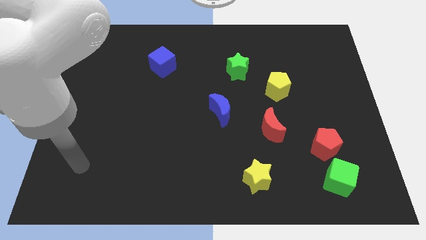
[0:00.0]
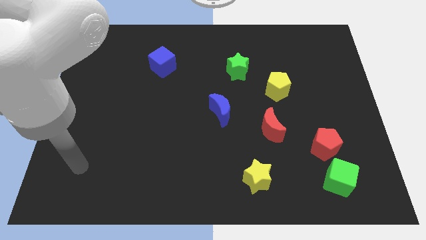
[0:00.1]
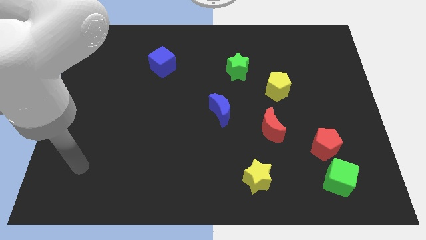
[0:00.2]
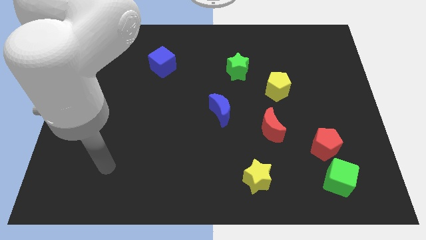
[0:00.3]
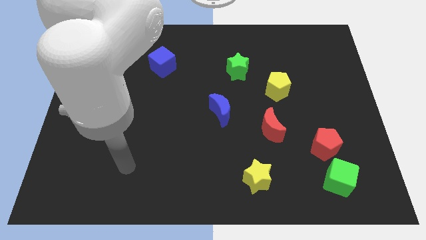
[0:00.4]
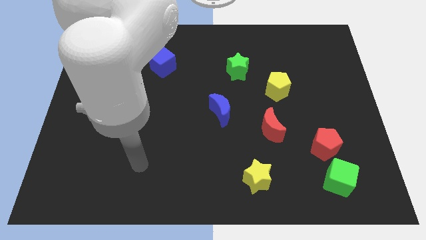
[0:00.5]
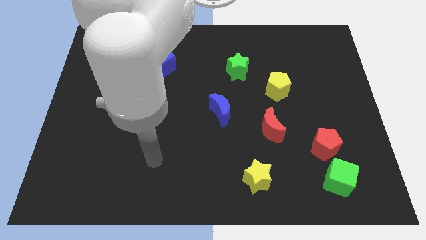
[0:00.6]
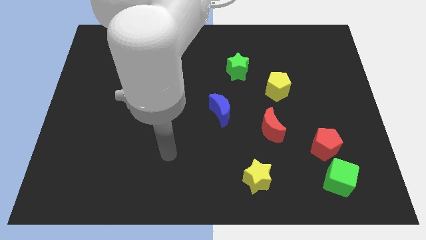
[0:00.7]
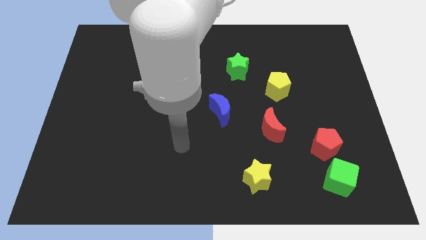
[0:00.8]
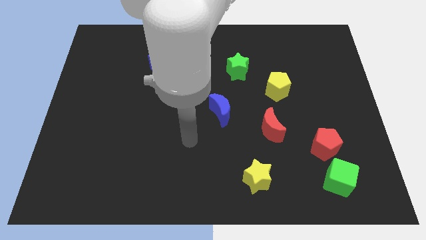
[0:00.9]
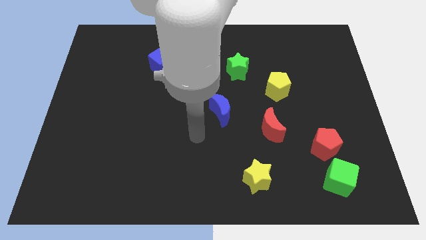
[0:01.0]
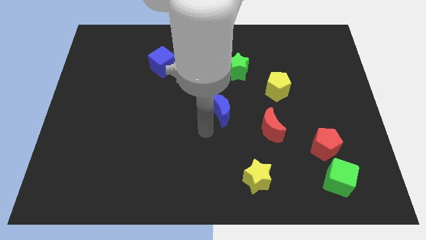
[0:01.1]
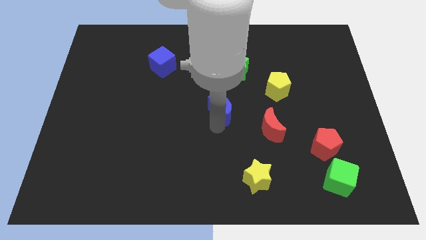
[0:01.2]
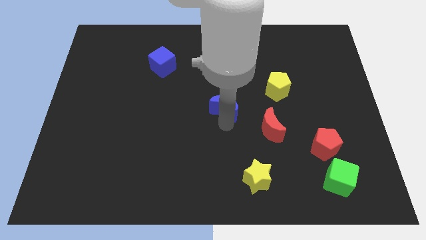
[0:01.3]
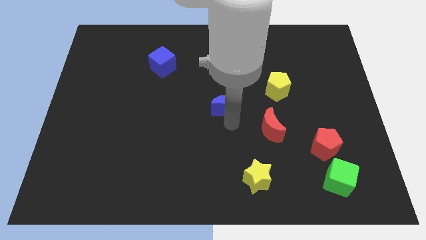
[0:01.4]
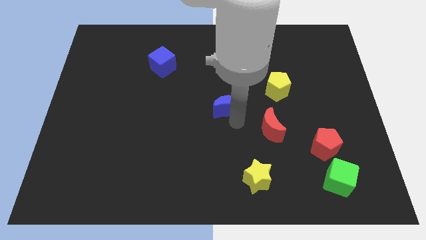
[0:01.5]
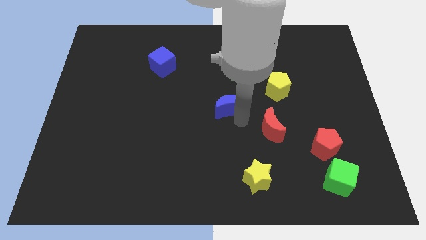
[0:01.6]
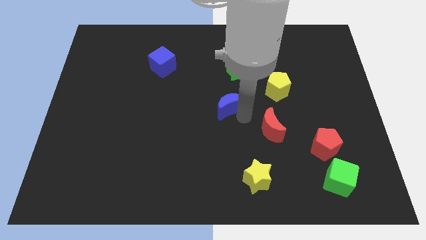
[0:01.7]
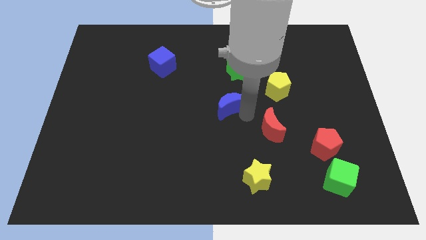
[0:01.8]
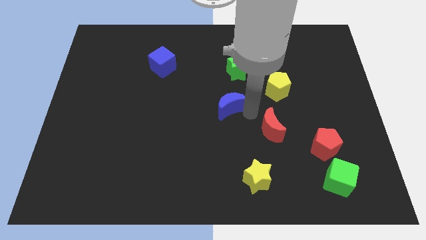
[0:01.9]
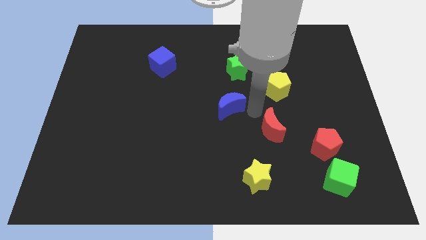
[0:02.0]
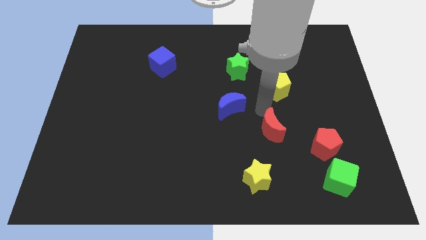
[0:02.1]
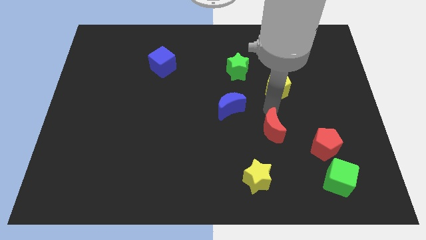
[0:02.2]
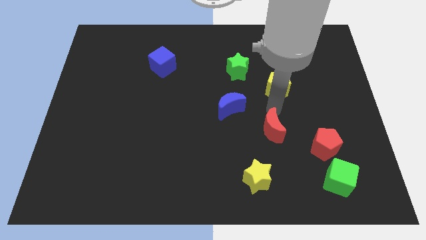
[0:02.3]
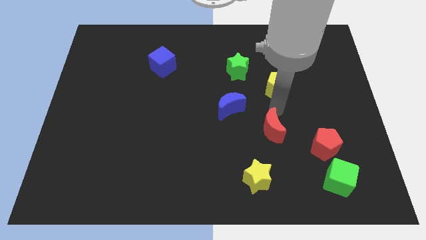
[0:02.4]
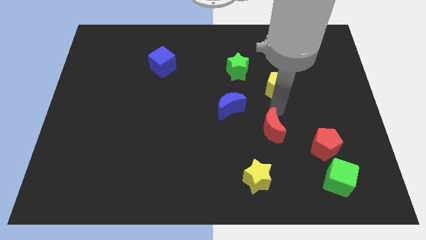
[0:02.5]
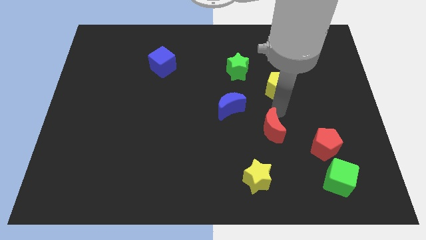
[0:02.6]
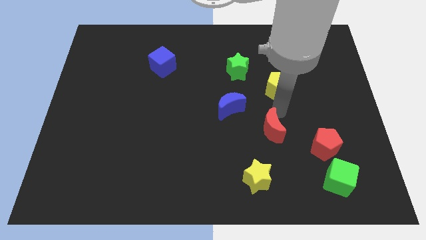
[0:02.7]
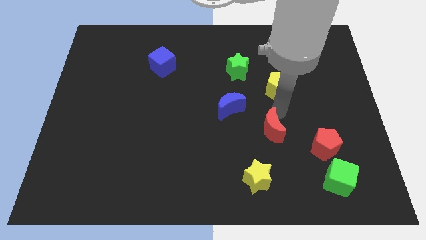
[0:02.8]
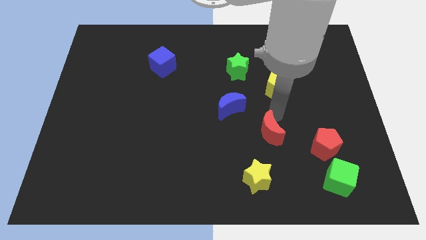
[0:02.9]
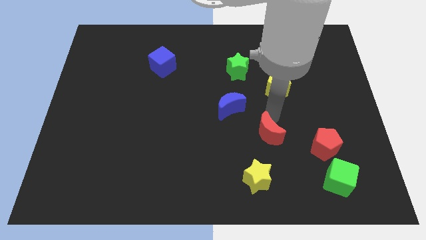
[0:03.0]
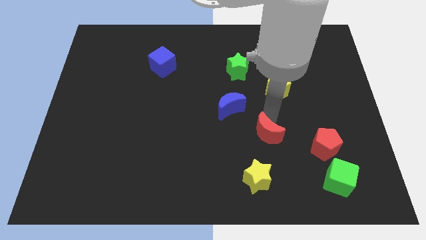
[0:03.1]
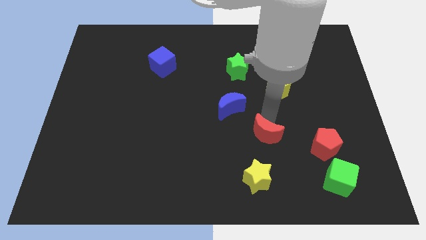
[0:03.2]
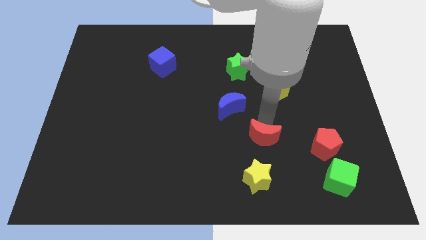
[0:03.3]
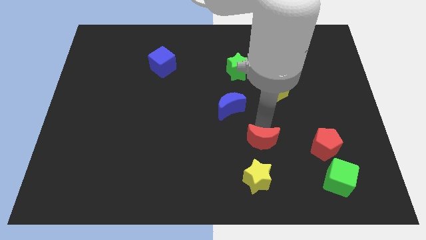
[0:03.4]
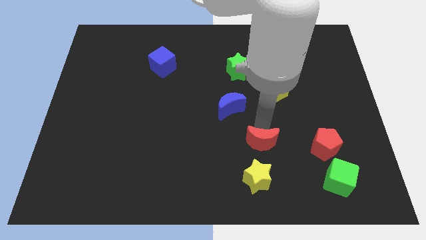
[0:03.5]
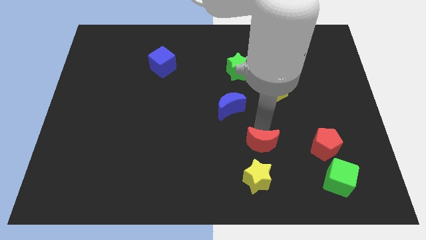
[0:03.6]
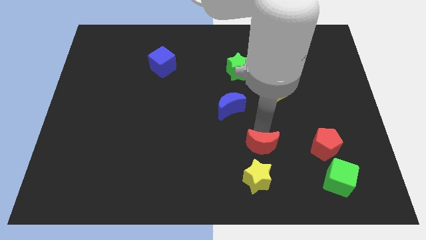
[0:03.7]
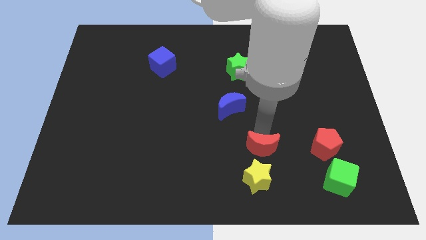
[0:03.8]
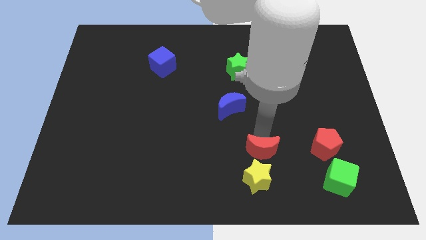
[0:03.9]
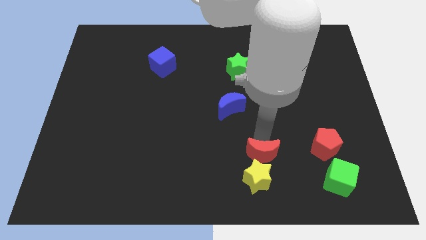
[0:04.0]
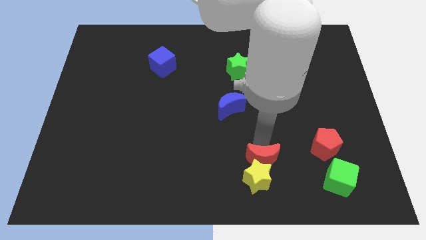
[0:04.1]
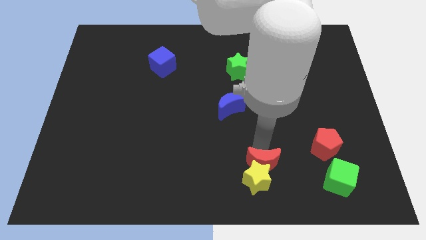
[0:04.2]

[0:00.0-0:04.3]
slide the red moon to the yellow star

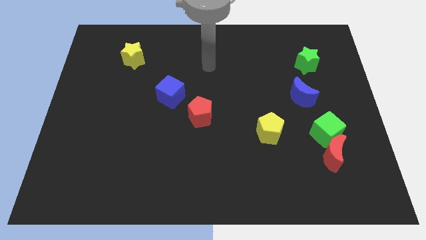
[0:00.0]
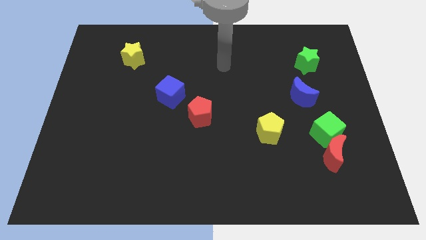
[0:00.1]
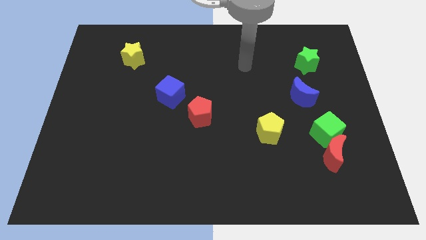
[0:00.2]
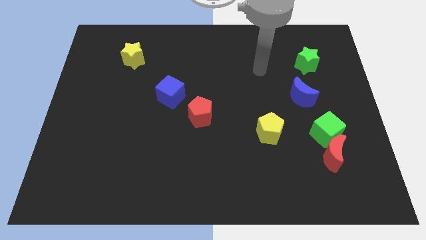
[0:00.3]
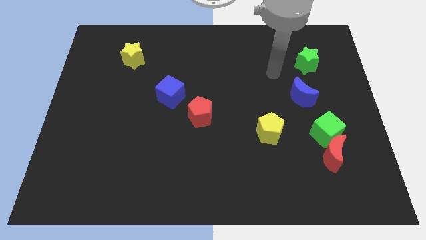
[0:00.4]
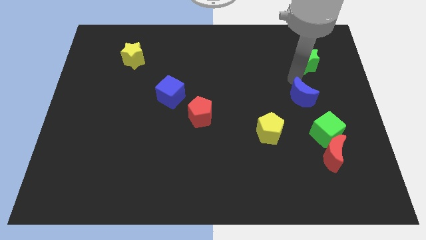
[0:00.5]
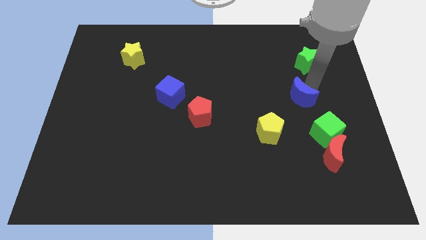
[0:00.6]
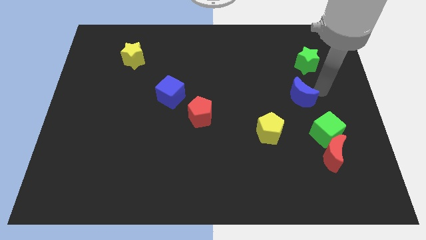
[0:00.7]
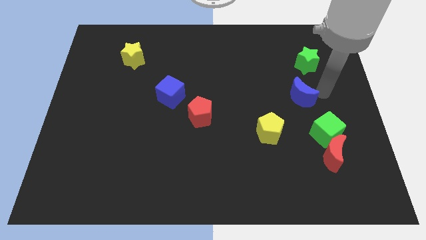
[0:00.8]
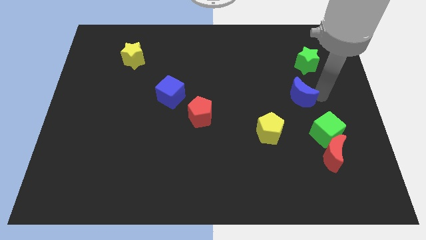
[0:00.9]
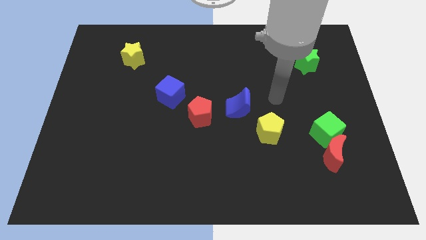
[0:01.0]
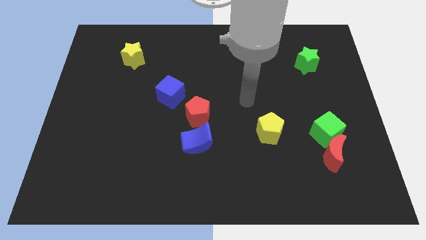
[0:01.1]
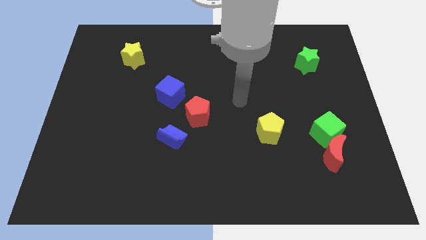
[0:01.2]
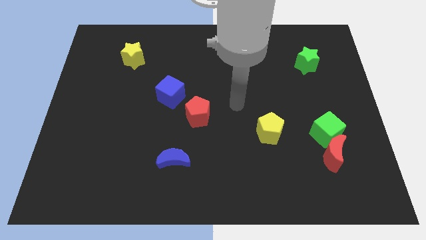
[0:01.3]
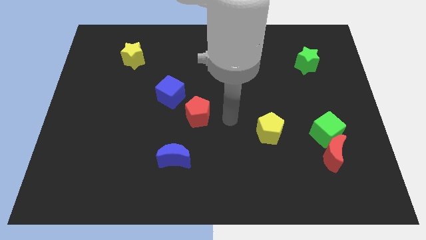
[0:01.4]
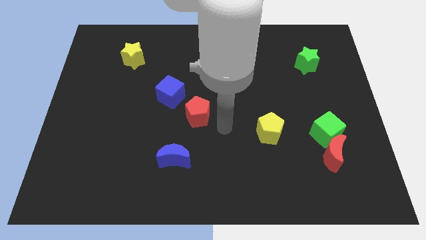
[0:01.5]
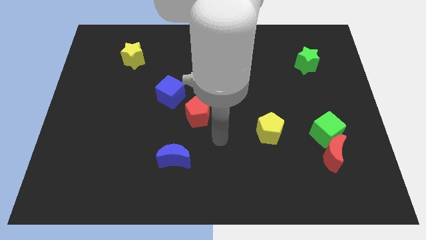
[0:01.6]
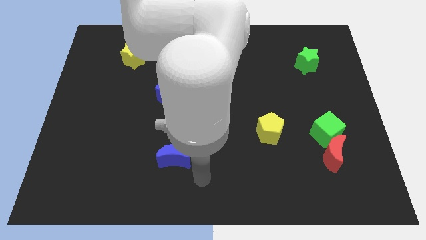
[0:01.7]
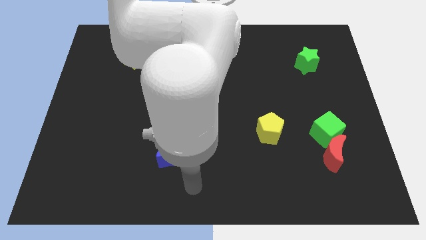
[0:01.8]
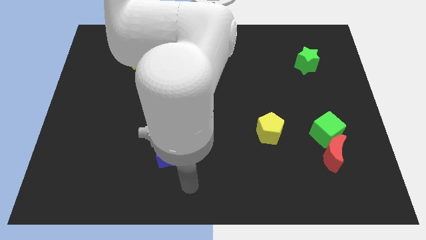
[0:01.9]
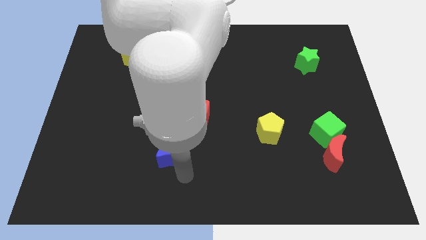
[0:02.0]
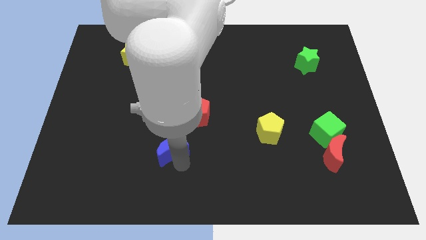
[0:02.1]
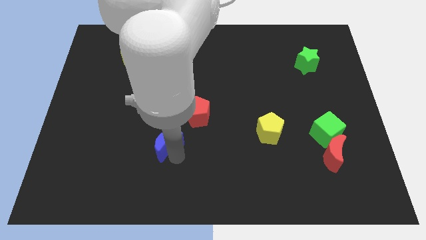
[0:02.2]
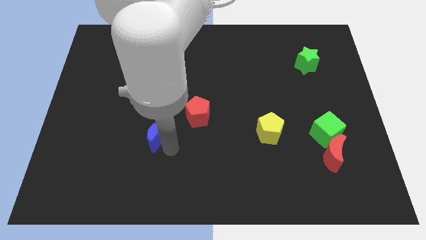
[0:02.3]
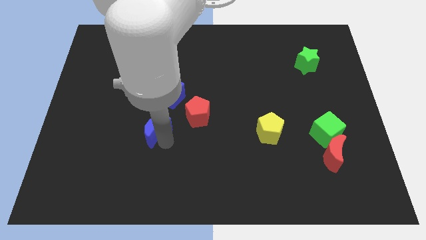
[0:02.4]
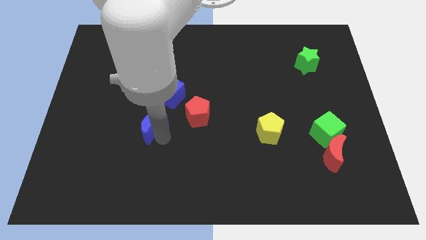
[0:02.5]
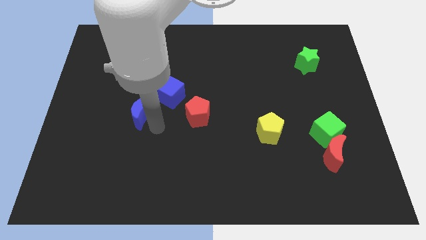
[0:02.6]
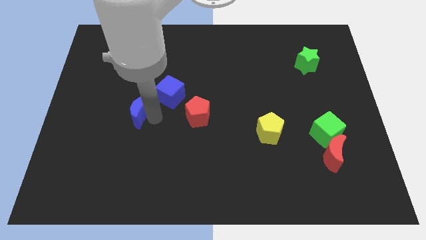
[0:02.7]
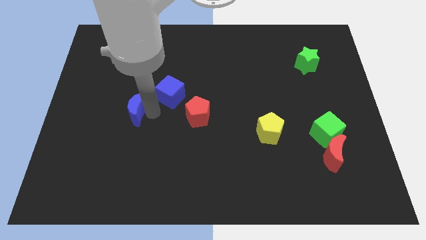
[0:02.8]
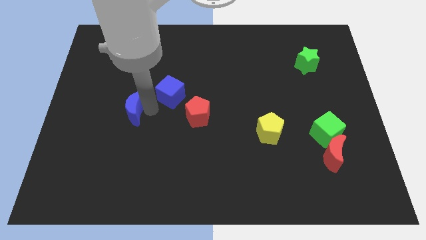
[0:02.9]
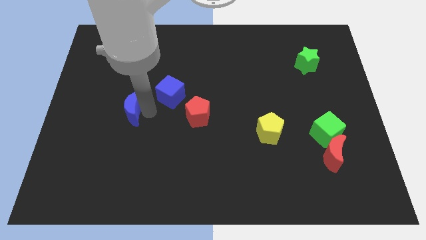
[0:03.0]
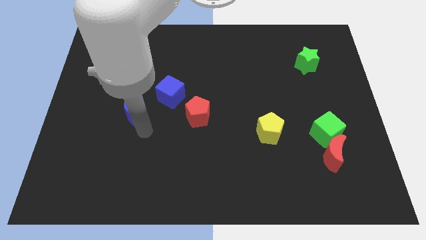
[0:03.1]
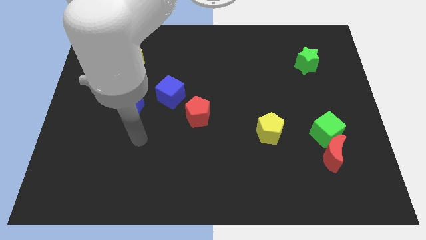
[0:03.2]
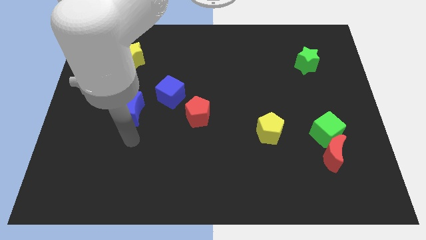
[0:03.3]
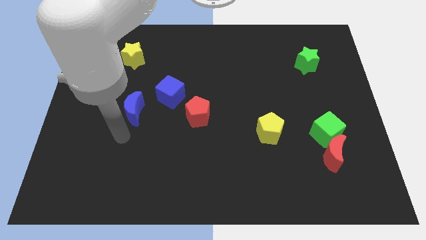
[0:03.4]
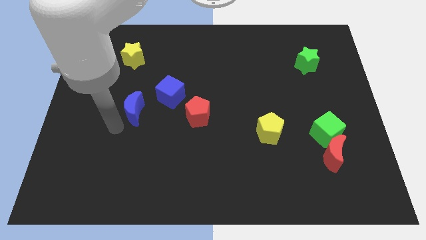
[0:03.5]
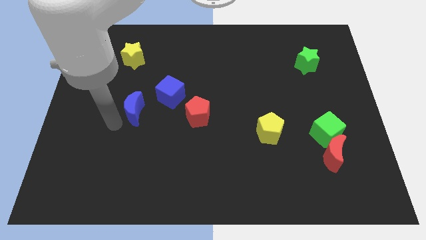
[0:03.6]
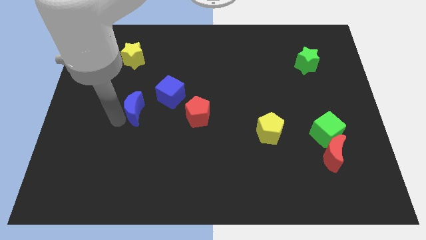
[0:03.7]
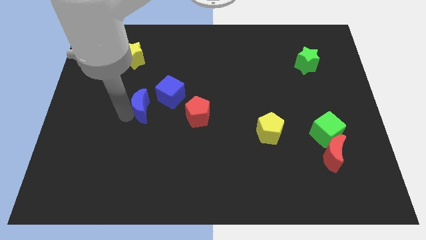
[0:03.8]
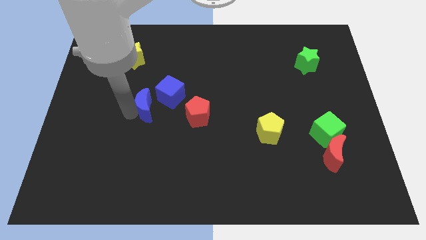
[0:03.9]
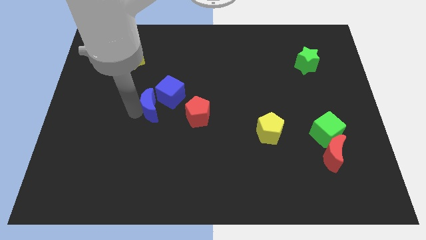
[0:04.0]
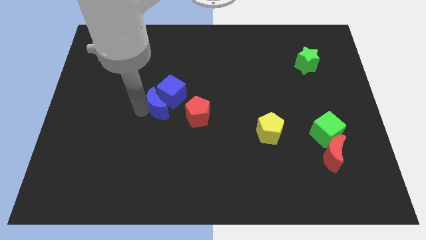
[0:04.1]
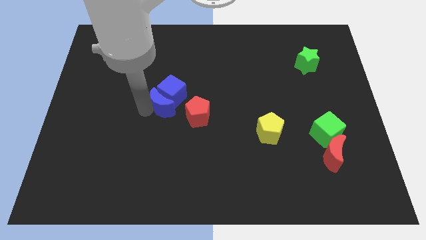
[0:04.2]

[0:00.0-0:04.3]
move the blue moon towards the blue cube
